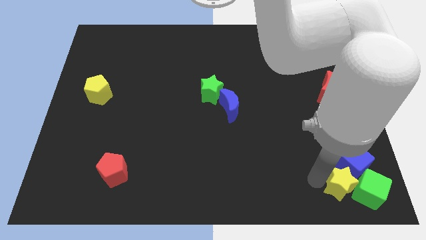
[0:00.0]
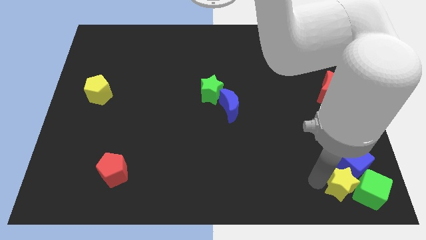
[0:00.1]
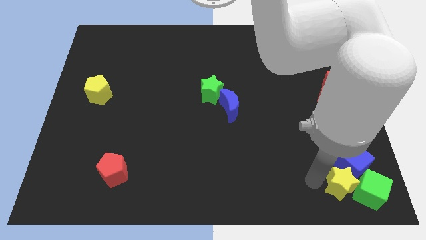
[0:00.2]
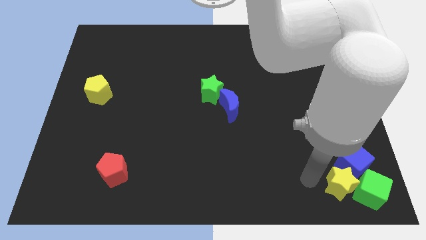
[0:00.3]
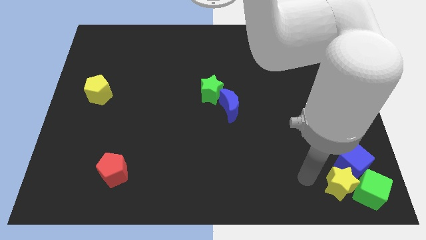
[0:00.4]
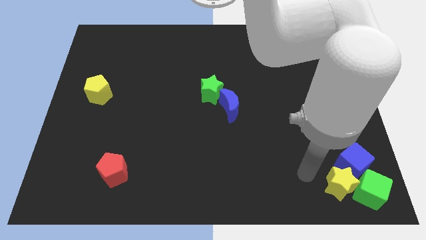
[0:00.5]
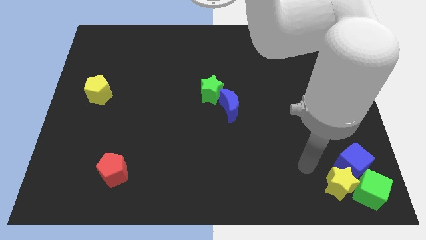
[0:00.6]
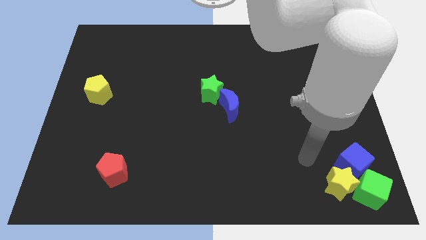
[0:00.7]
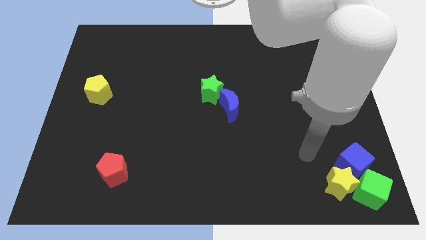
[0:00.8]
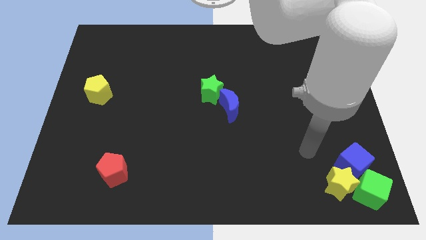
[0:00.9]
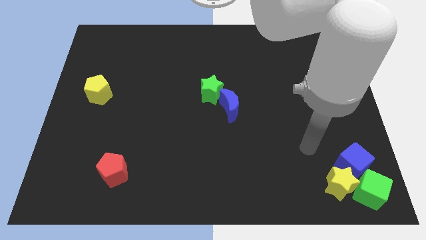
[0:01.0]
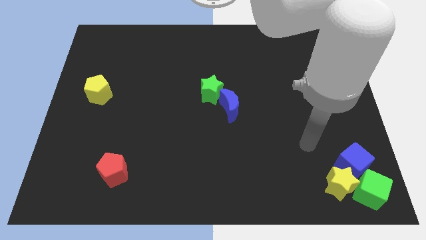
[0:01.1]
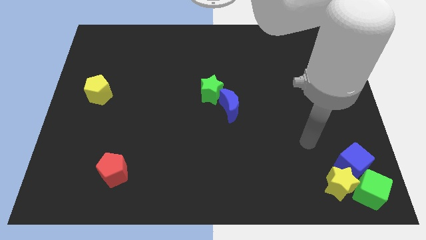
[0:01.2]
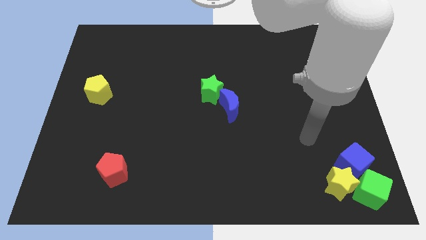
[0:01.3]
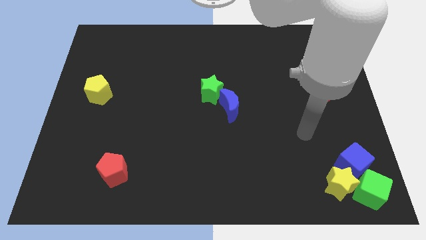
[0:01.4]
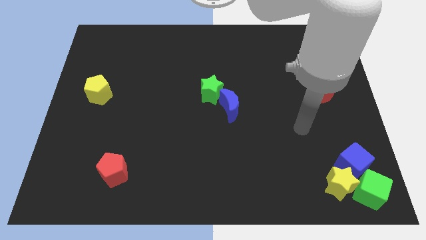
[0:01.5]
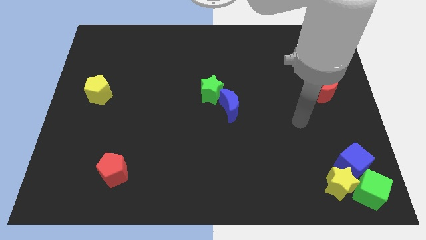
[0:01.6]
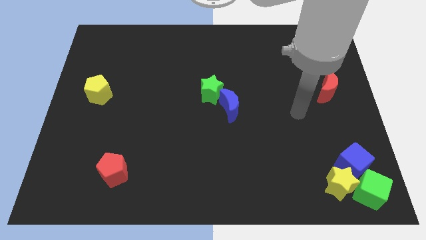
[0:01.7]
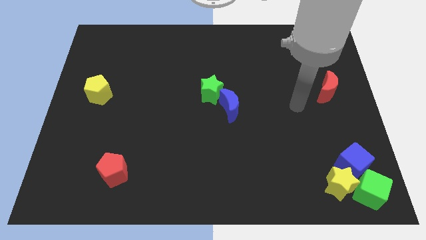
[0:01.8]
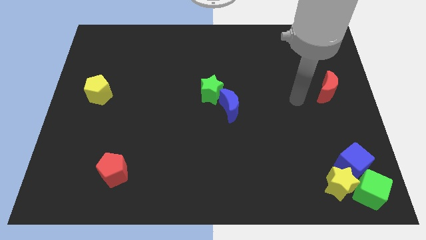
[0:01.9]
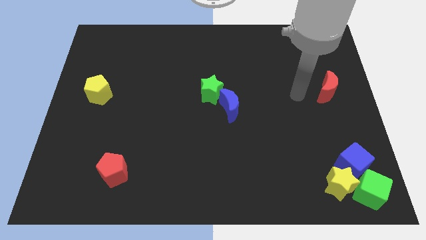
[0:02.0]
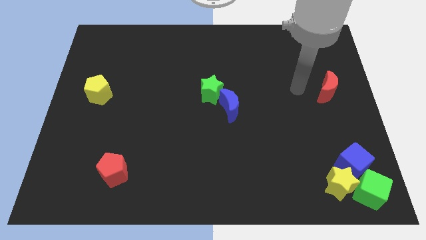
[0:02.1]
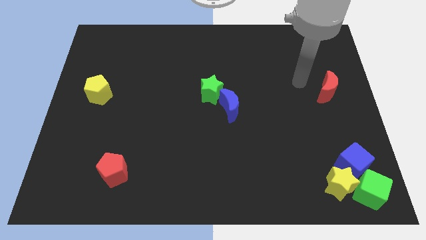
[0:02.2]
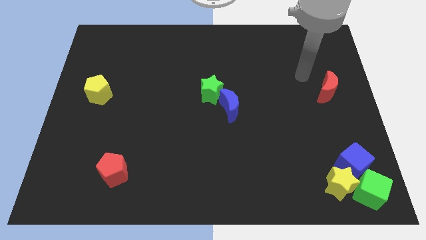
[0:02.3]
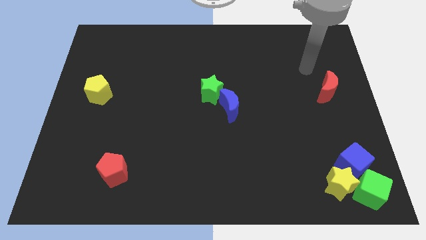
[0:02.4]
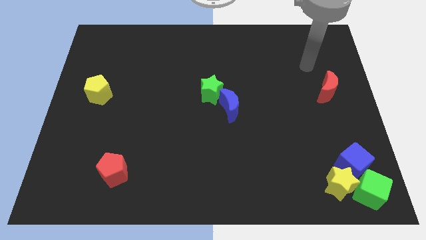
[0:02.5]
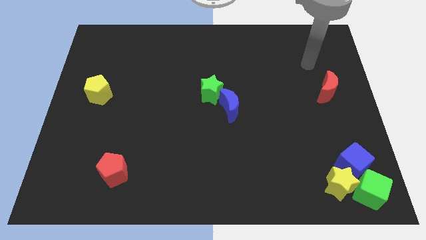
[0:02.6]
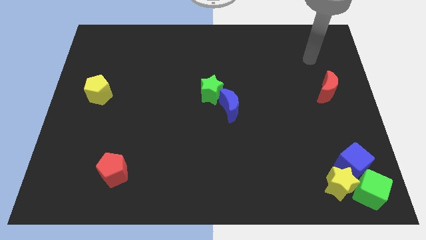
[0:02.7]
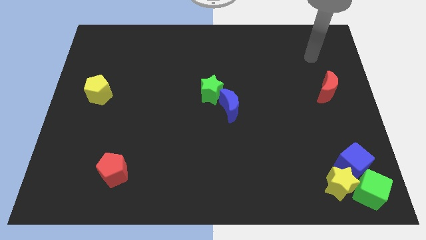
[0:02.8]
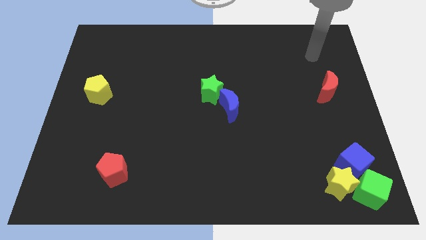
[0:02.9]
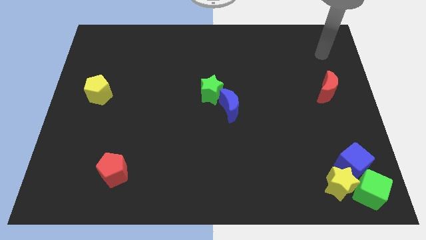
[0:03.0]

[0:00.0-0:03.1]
move your hand away from yellow star

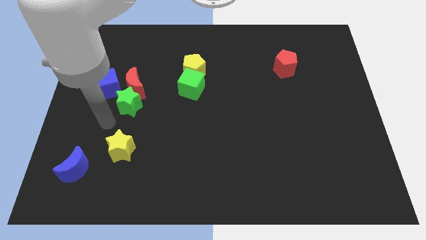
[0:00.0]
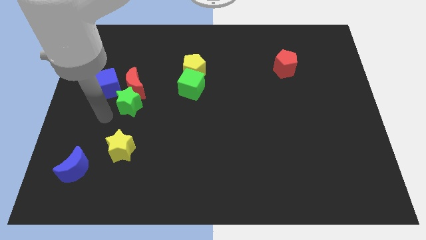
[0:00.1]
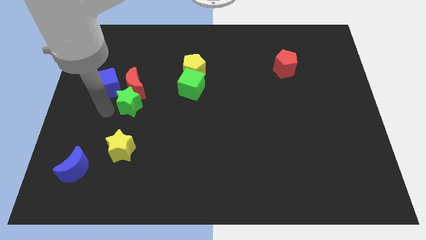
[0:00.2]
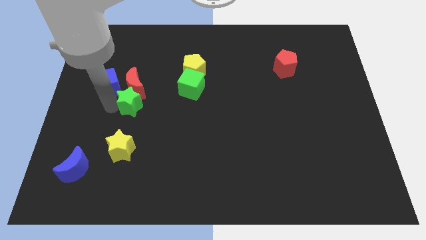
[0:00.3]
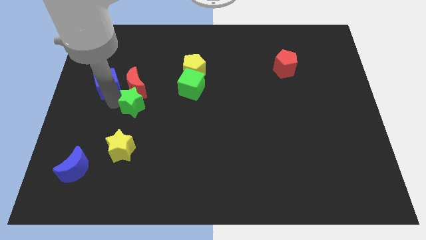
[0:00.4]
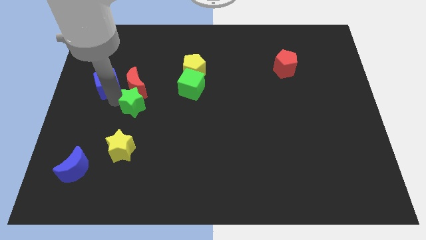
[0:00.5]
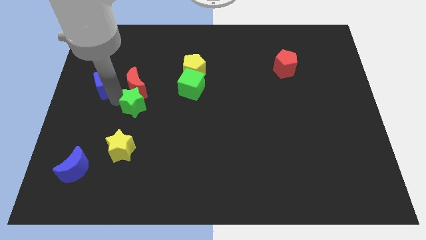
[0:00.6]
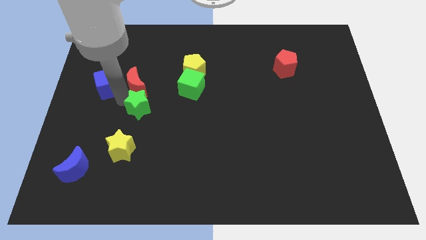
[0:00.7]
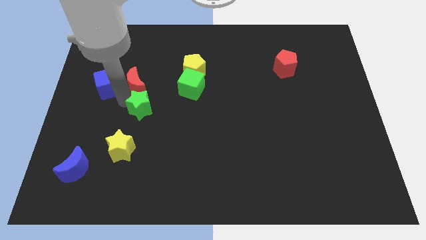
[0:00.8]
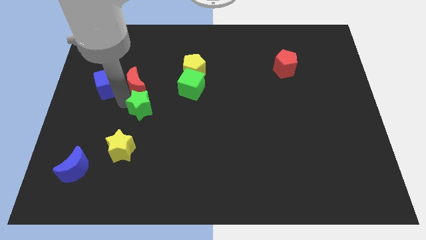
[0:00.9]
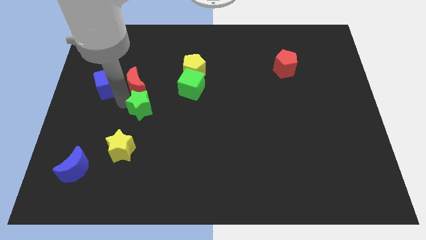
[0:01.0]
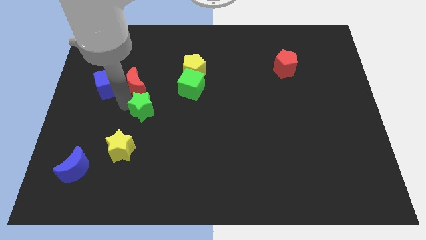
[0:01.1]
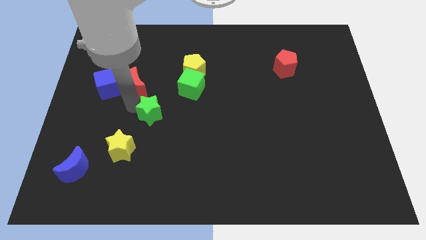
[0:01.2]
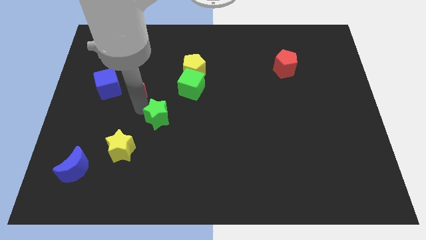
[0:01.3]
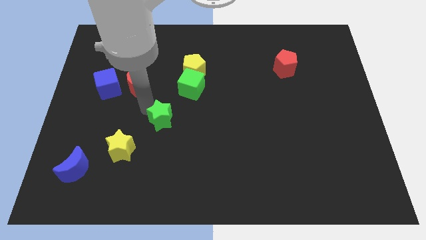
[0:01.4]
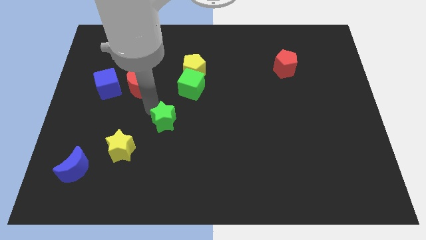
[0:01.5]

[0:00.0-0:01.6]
separate green star and red moon

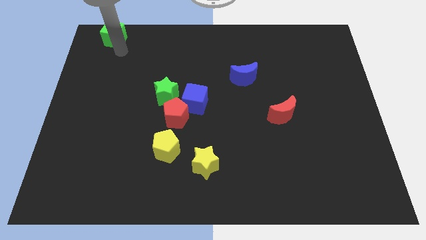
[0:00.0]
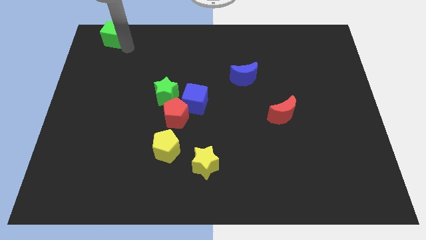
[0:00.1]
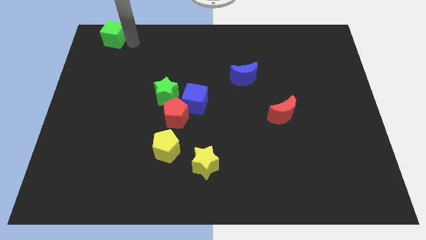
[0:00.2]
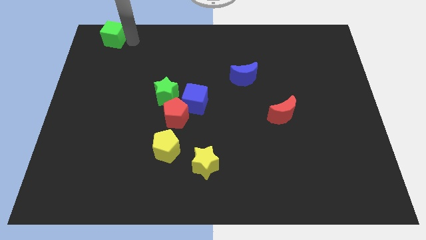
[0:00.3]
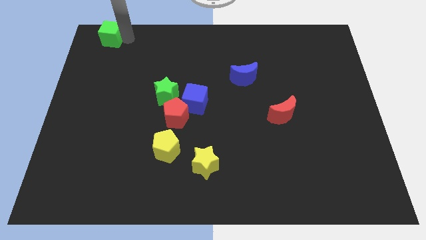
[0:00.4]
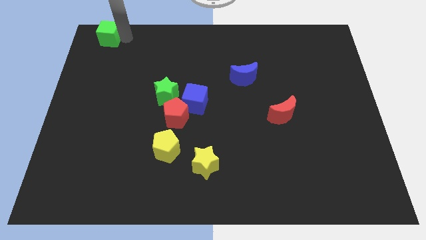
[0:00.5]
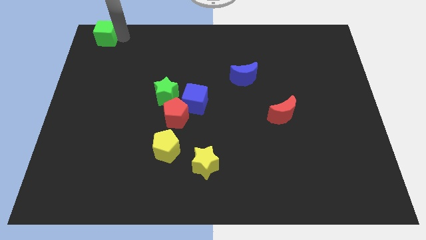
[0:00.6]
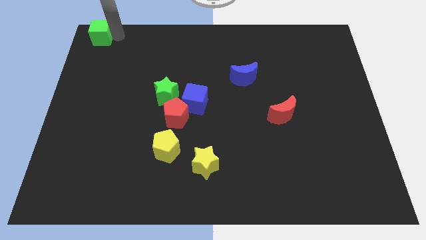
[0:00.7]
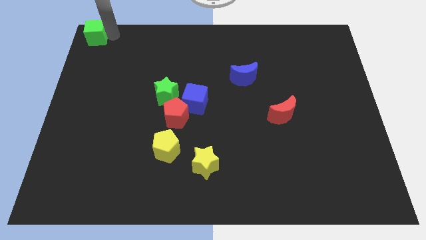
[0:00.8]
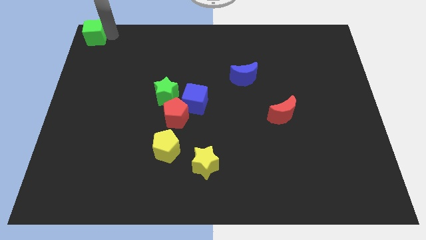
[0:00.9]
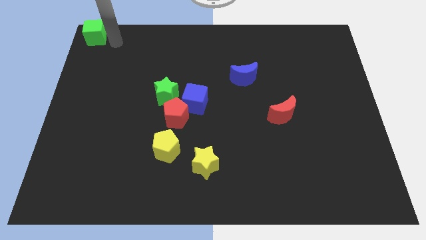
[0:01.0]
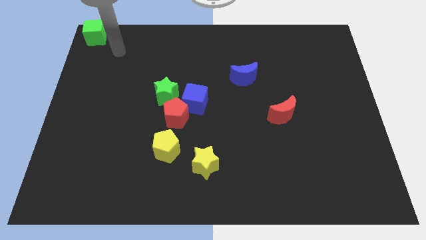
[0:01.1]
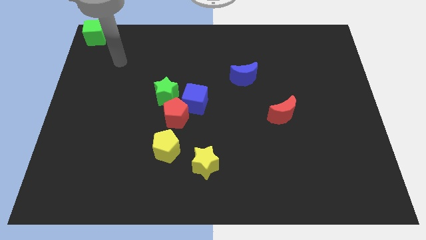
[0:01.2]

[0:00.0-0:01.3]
move the green cube to the top left

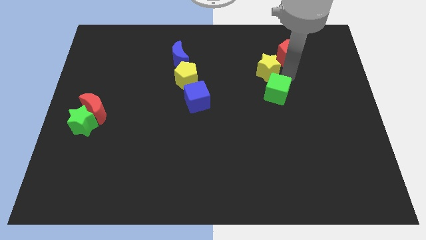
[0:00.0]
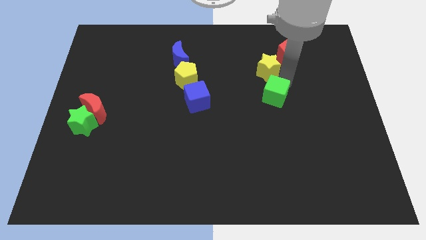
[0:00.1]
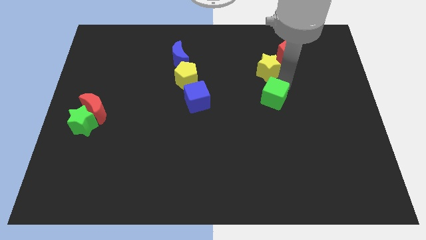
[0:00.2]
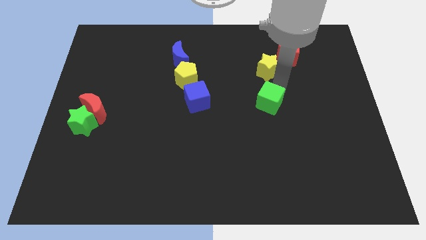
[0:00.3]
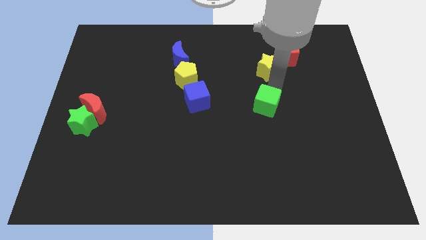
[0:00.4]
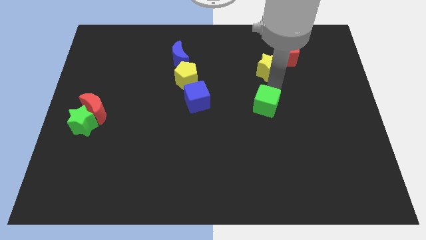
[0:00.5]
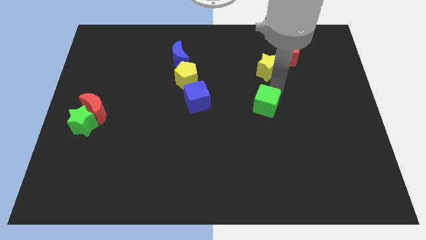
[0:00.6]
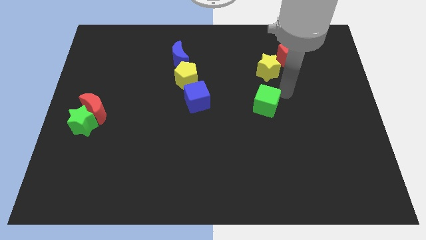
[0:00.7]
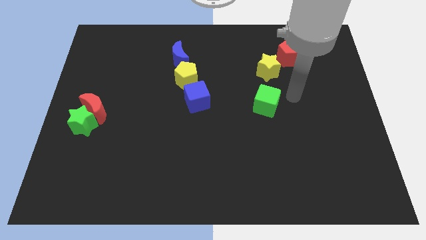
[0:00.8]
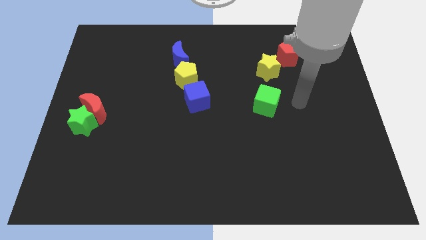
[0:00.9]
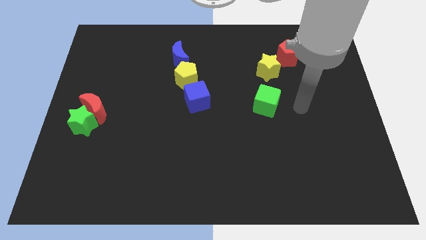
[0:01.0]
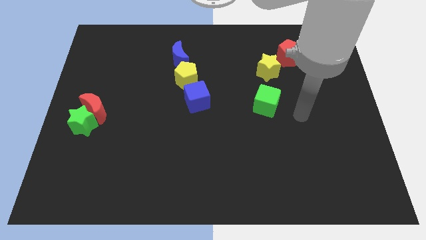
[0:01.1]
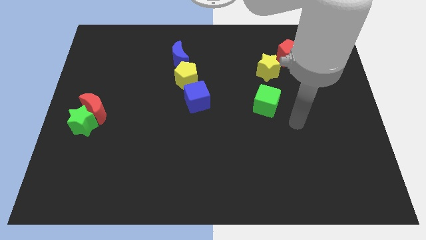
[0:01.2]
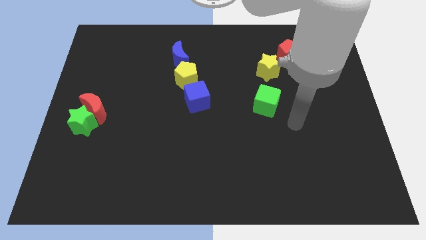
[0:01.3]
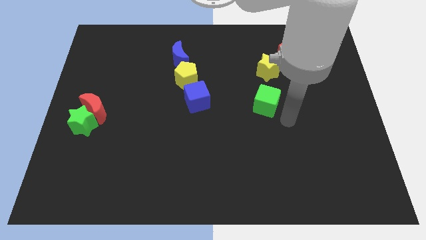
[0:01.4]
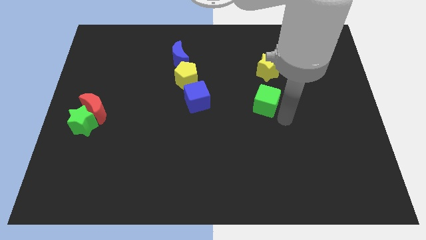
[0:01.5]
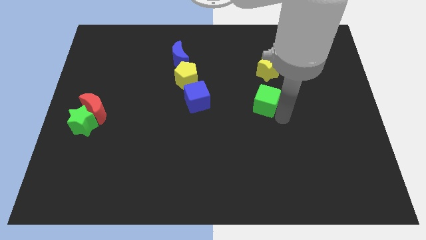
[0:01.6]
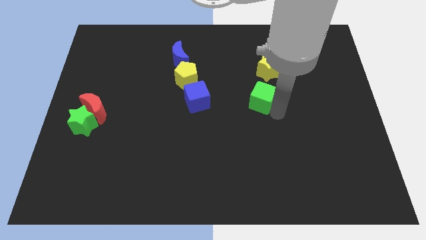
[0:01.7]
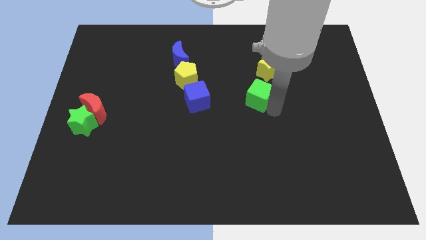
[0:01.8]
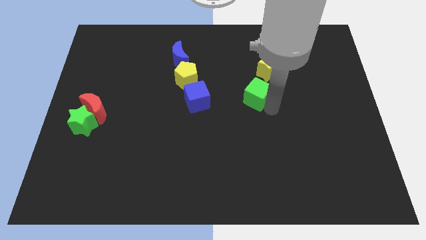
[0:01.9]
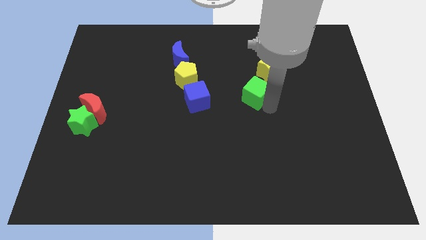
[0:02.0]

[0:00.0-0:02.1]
separate the yellow star and green cube

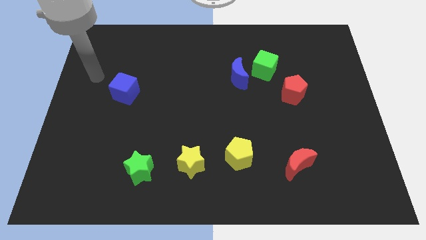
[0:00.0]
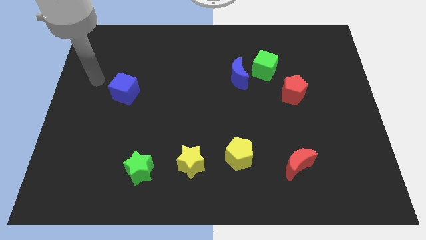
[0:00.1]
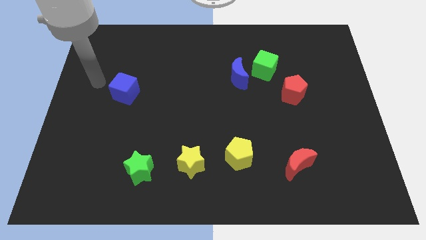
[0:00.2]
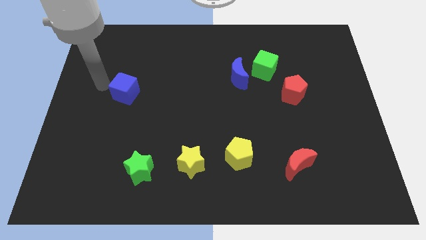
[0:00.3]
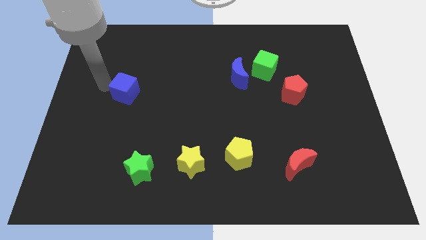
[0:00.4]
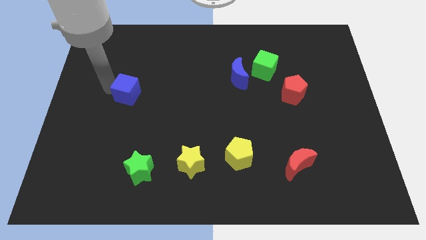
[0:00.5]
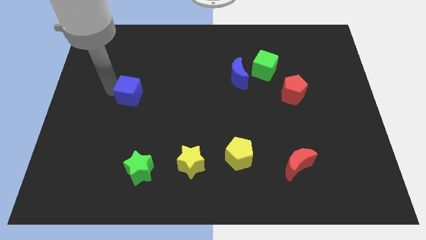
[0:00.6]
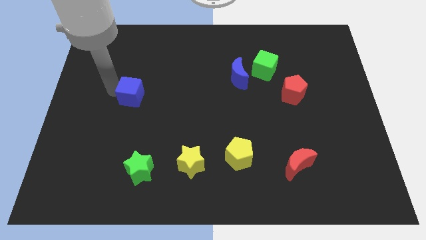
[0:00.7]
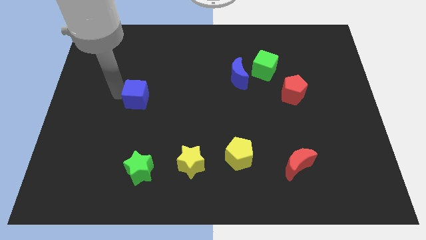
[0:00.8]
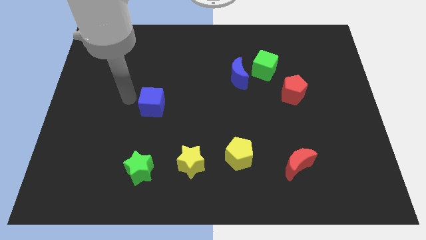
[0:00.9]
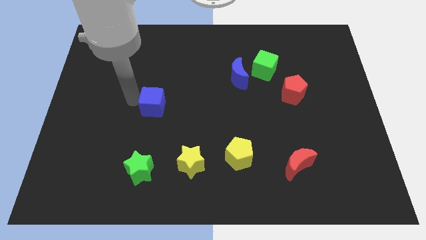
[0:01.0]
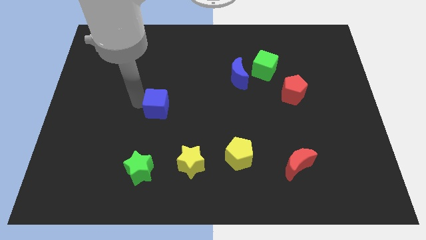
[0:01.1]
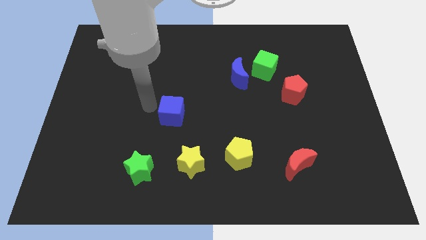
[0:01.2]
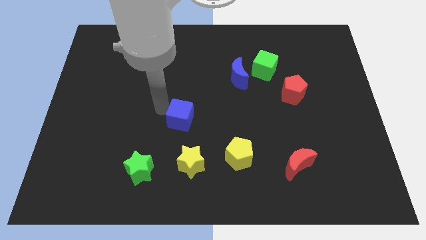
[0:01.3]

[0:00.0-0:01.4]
push the blue cube towards the yellow pentagon
